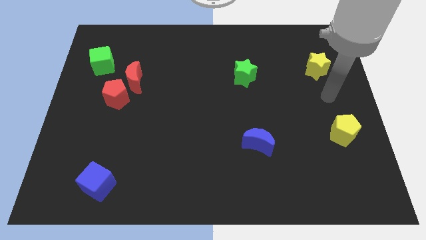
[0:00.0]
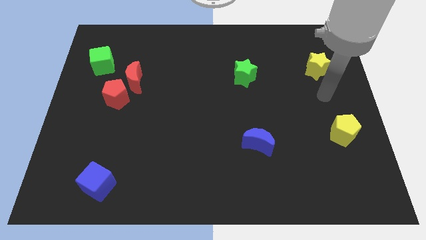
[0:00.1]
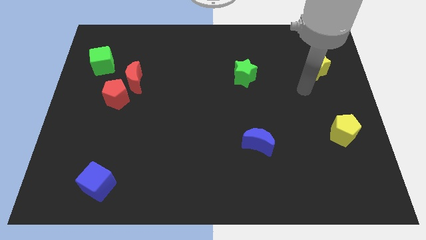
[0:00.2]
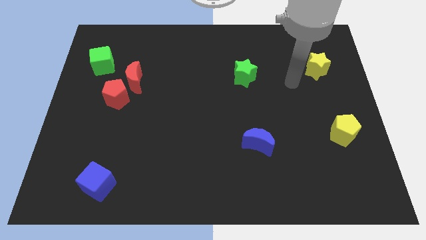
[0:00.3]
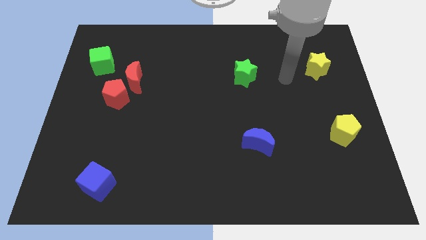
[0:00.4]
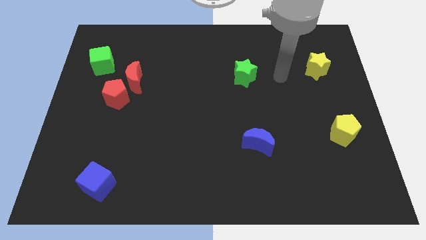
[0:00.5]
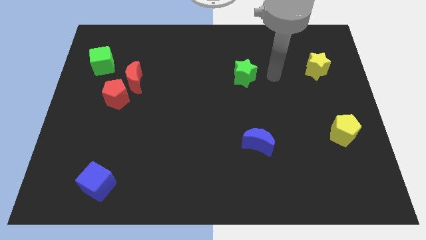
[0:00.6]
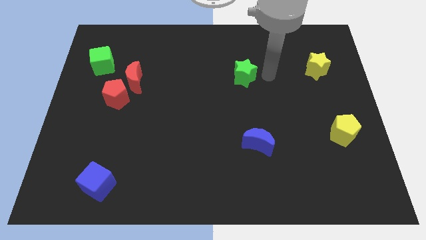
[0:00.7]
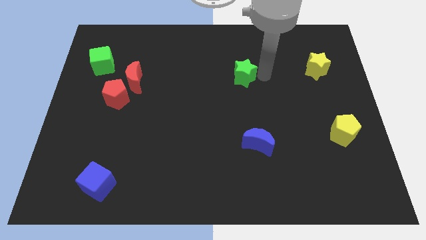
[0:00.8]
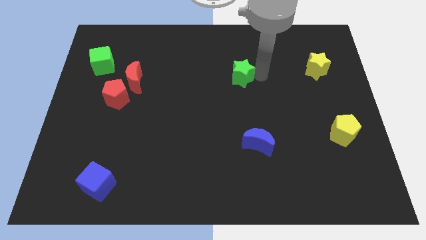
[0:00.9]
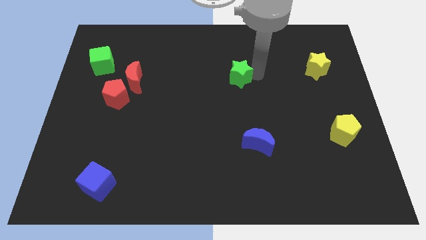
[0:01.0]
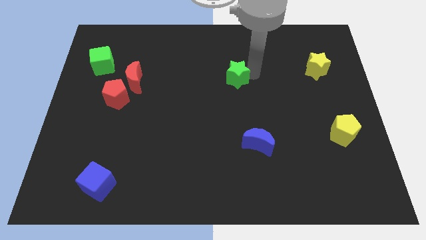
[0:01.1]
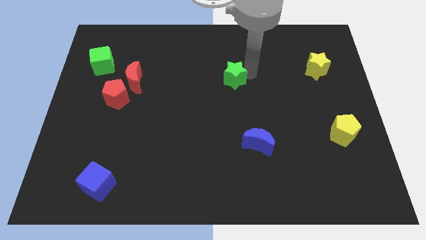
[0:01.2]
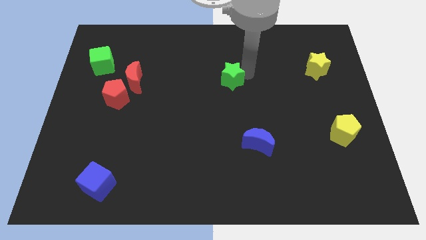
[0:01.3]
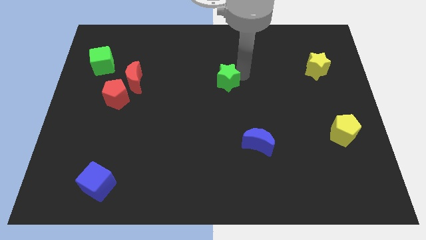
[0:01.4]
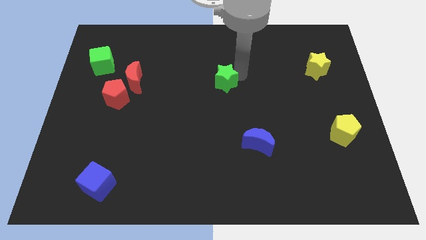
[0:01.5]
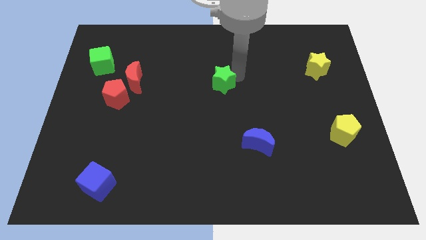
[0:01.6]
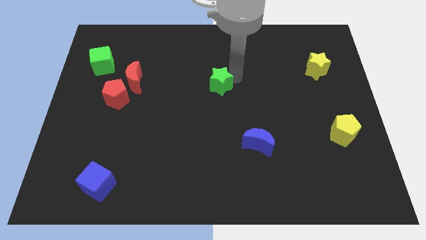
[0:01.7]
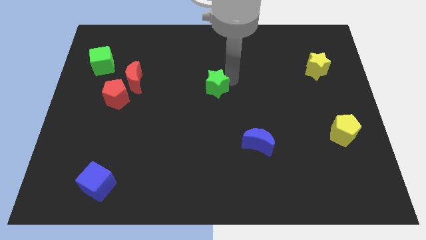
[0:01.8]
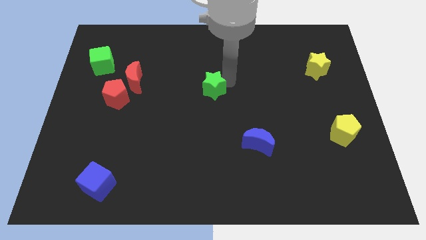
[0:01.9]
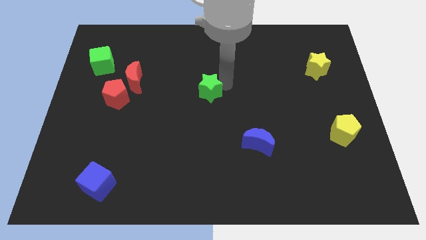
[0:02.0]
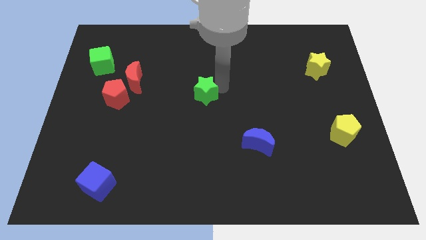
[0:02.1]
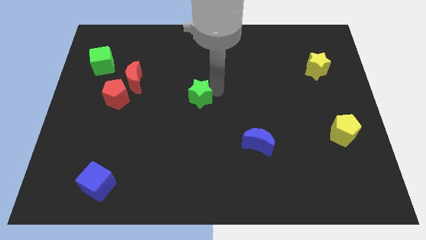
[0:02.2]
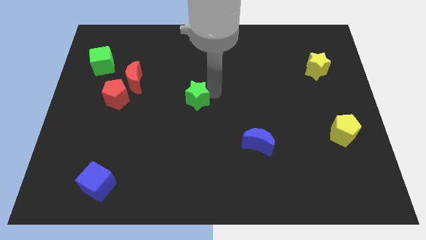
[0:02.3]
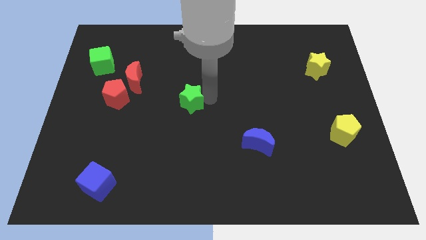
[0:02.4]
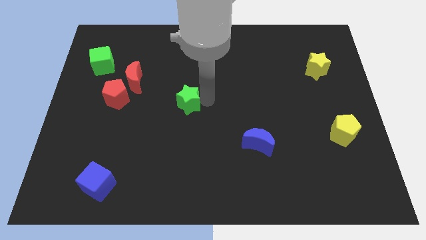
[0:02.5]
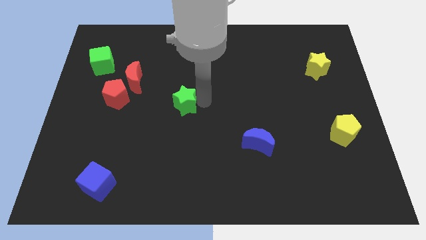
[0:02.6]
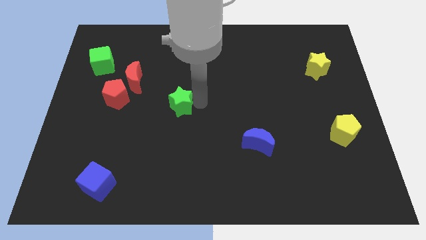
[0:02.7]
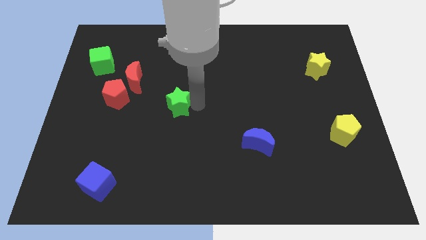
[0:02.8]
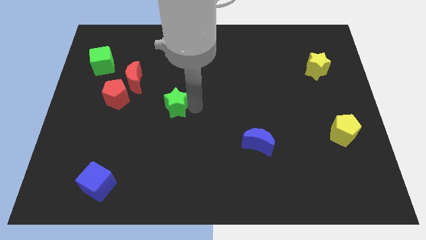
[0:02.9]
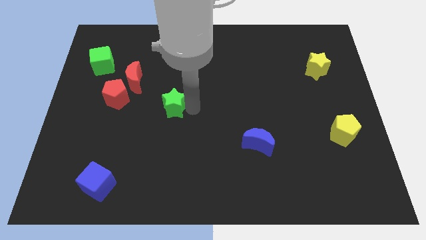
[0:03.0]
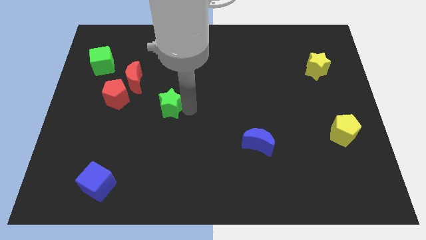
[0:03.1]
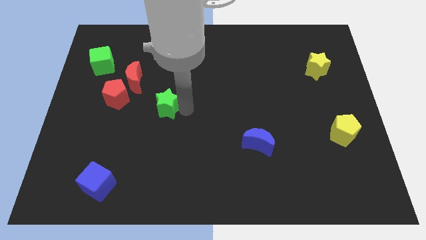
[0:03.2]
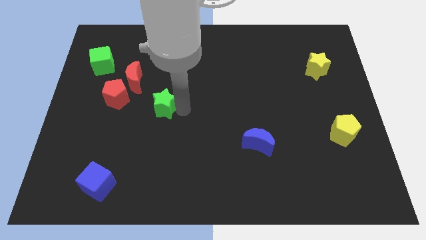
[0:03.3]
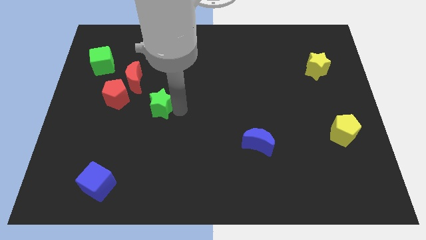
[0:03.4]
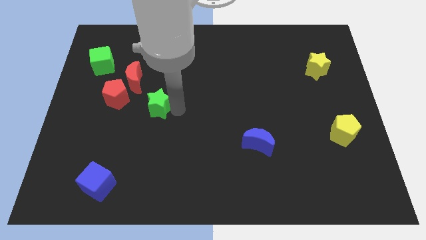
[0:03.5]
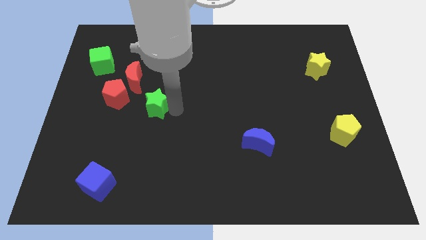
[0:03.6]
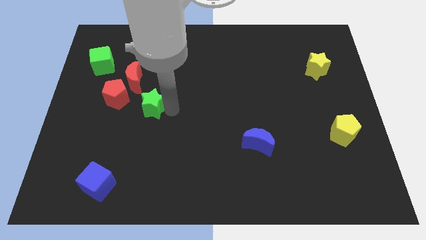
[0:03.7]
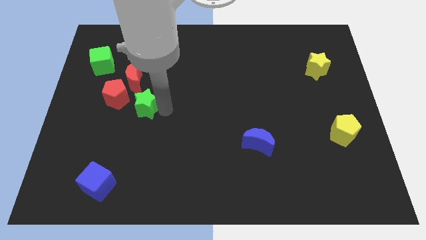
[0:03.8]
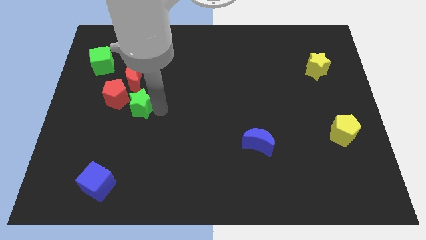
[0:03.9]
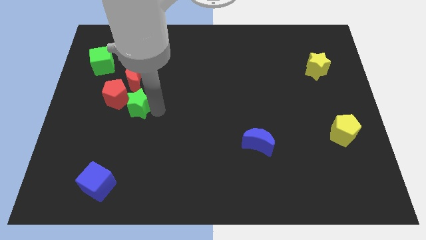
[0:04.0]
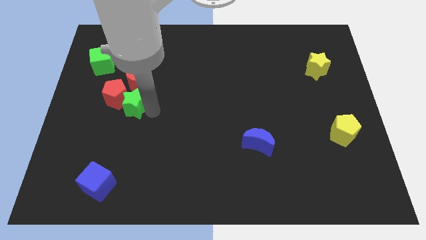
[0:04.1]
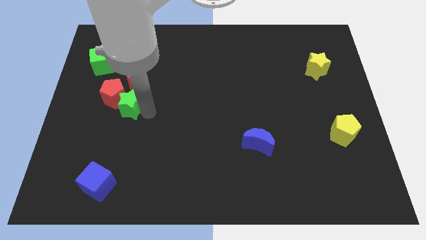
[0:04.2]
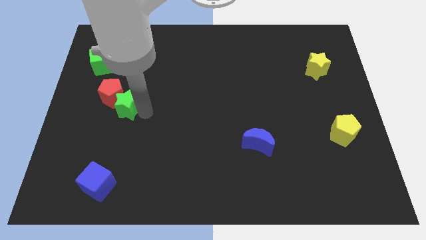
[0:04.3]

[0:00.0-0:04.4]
put the green star close to the red pentagon

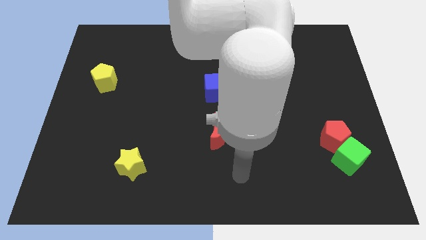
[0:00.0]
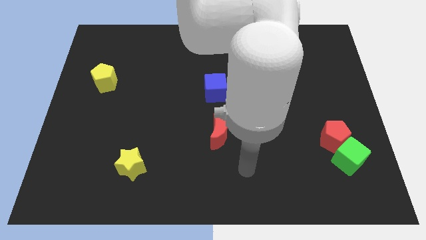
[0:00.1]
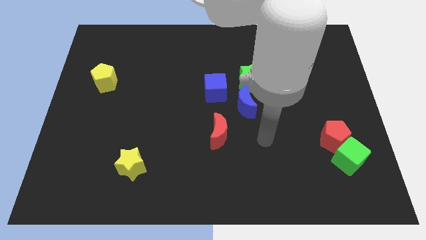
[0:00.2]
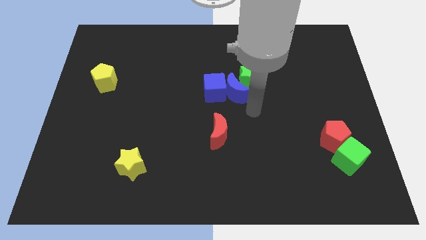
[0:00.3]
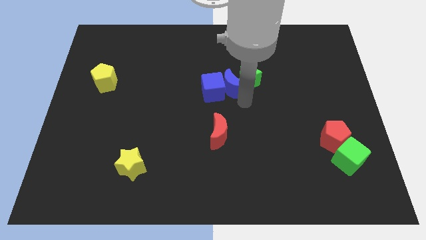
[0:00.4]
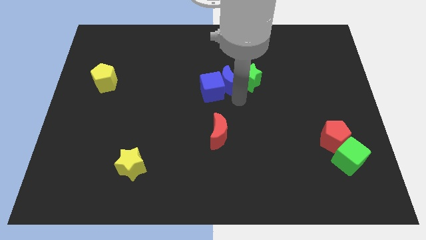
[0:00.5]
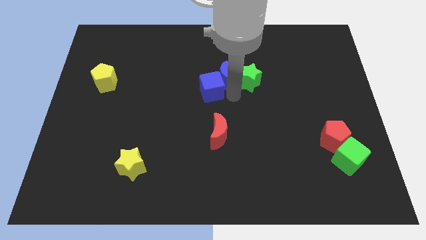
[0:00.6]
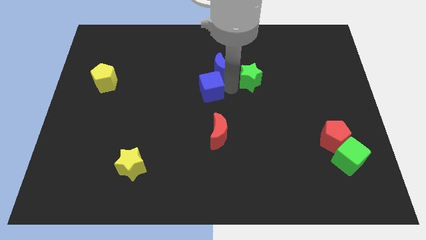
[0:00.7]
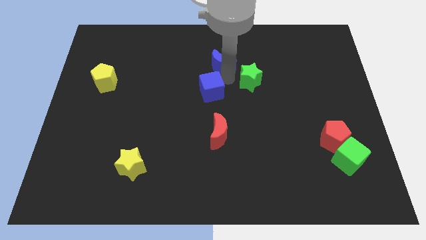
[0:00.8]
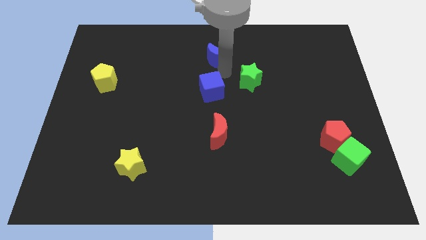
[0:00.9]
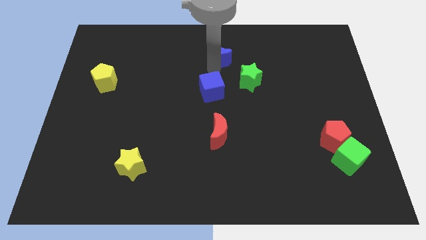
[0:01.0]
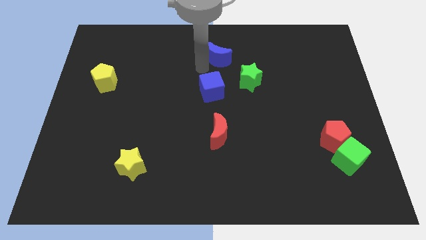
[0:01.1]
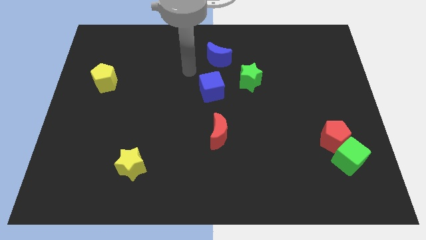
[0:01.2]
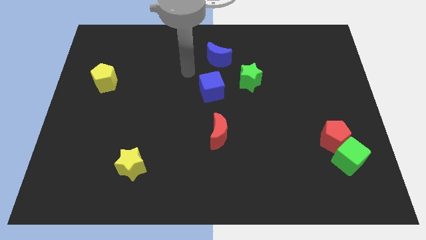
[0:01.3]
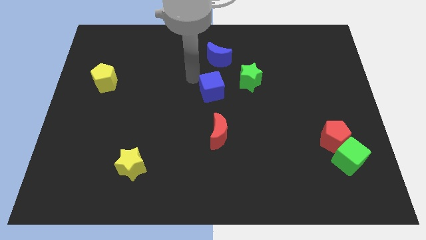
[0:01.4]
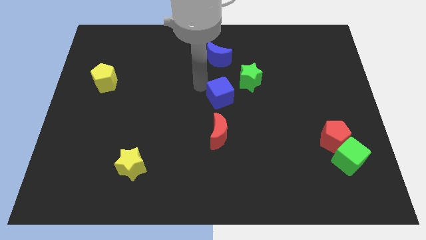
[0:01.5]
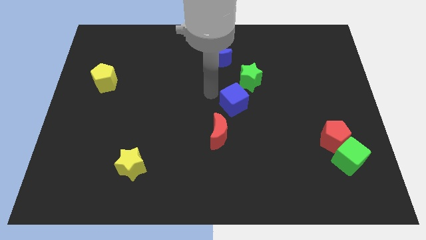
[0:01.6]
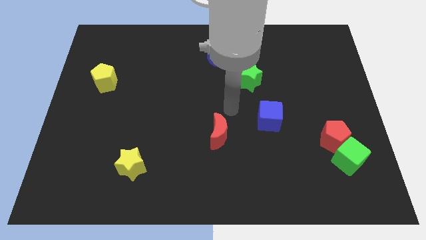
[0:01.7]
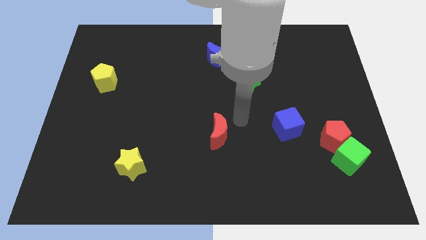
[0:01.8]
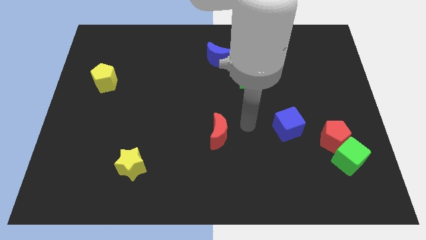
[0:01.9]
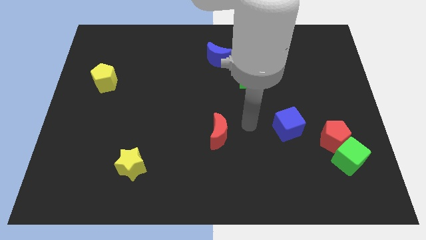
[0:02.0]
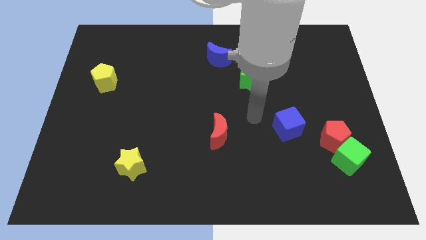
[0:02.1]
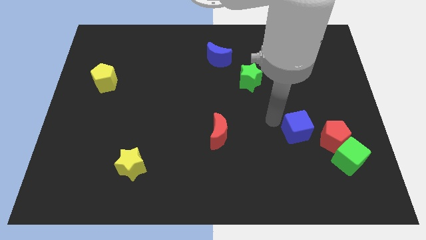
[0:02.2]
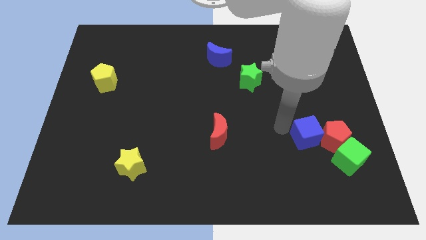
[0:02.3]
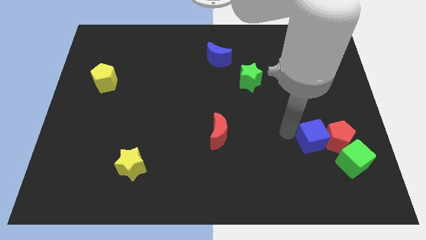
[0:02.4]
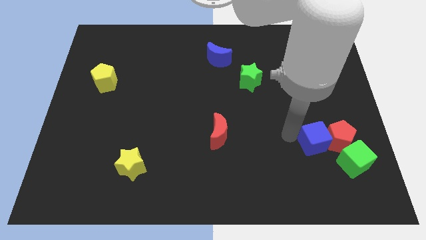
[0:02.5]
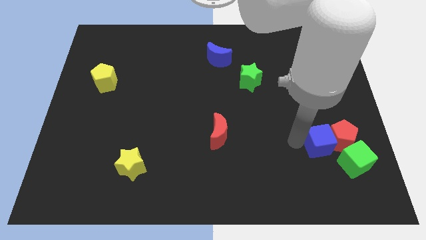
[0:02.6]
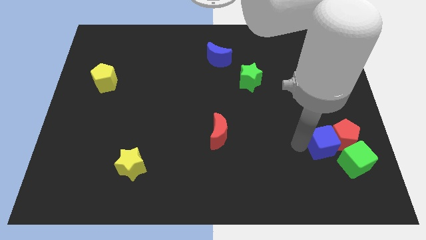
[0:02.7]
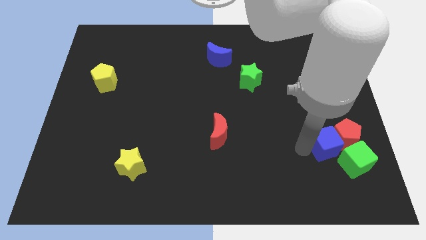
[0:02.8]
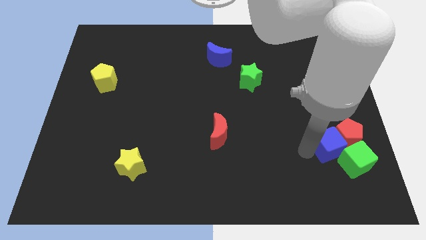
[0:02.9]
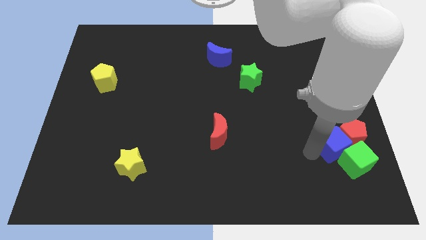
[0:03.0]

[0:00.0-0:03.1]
move the blue cube close to the green cube

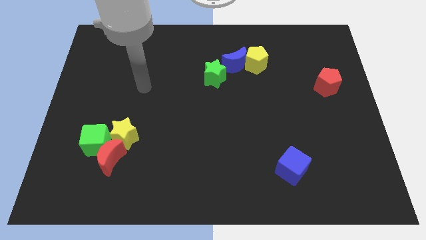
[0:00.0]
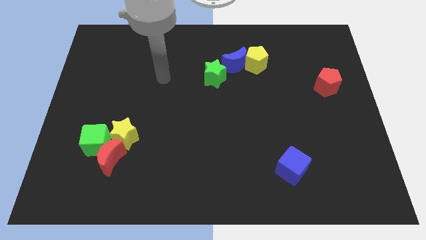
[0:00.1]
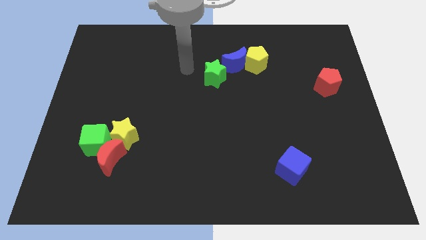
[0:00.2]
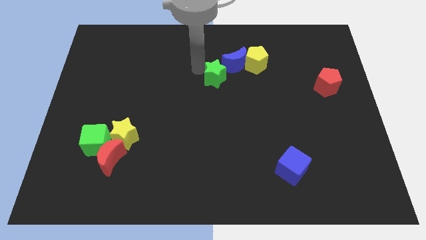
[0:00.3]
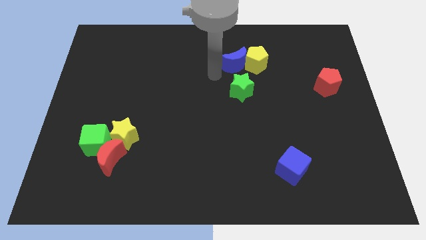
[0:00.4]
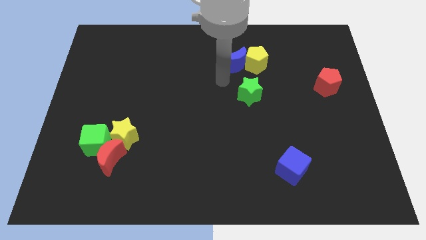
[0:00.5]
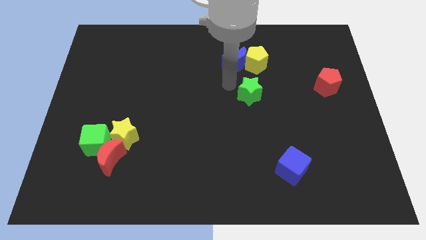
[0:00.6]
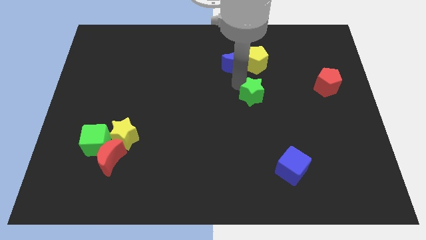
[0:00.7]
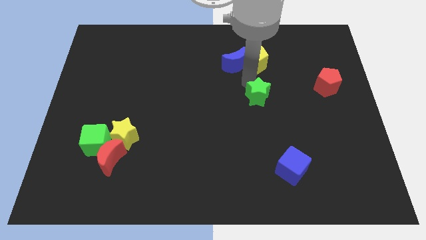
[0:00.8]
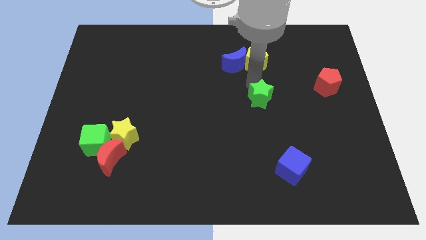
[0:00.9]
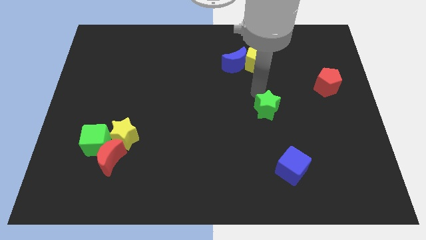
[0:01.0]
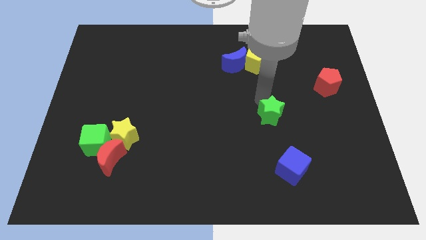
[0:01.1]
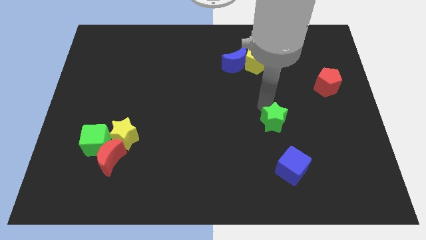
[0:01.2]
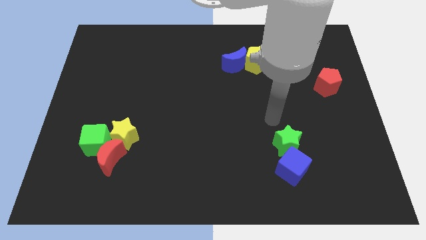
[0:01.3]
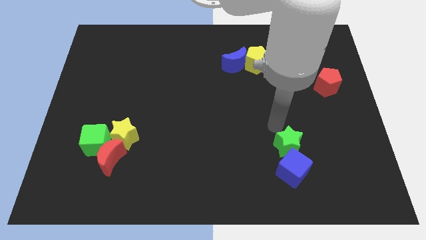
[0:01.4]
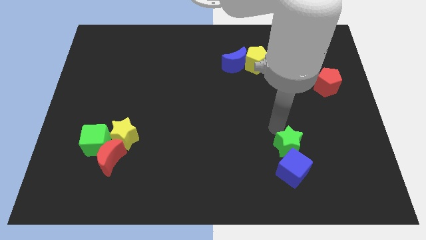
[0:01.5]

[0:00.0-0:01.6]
slide the green star next to the blue cube
